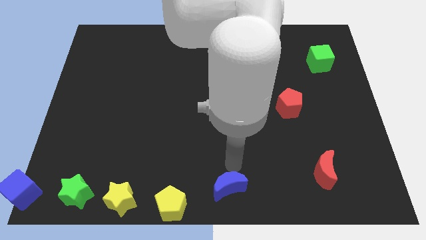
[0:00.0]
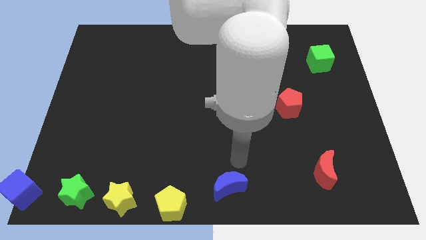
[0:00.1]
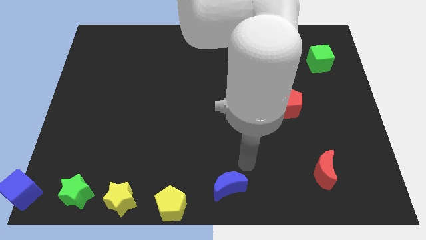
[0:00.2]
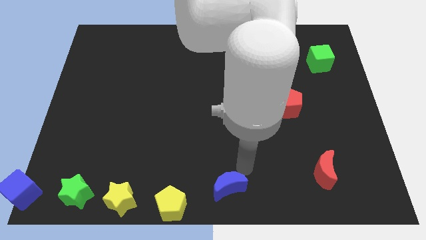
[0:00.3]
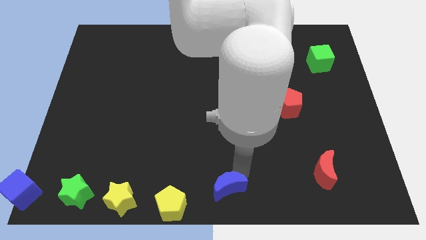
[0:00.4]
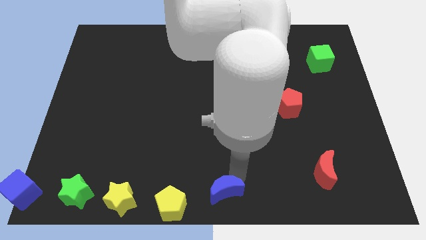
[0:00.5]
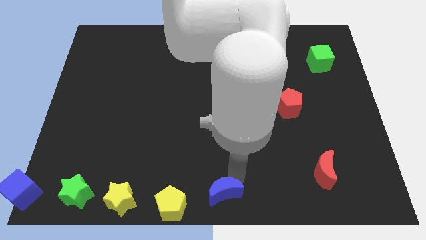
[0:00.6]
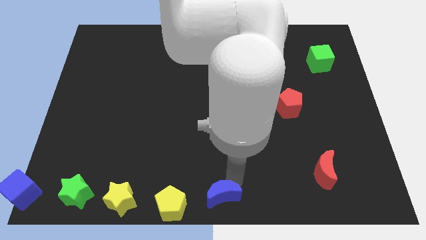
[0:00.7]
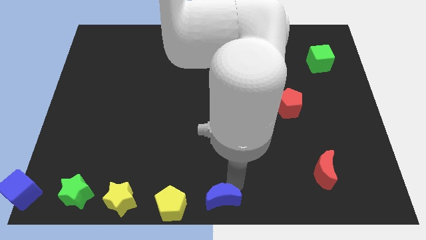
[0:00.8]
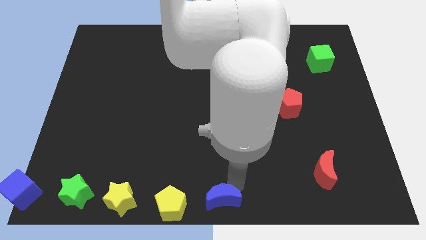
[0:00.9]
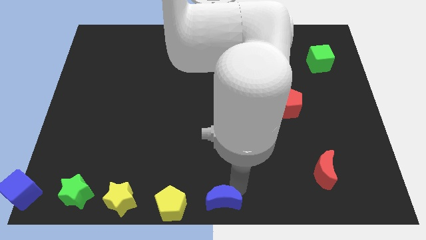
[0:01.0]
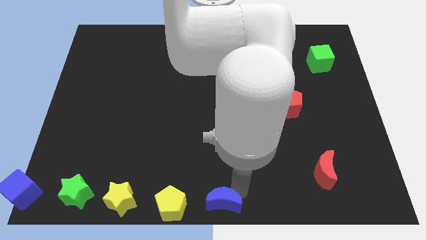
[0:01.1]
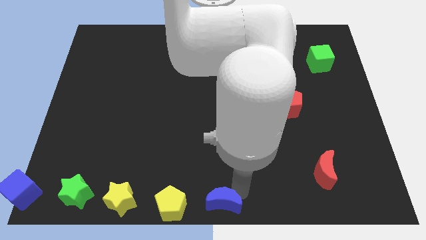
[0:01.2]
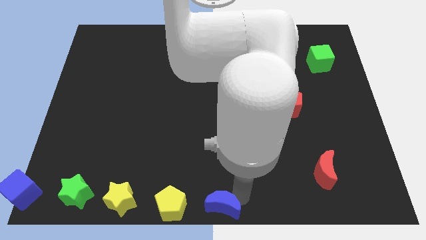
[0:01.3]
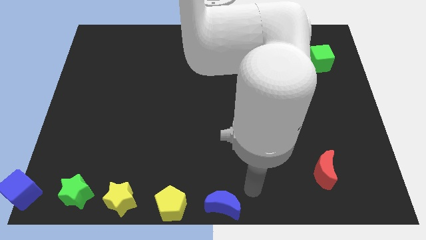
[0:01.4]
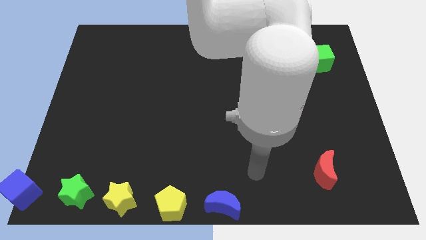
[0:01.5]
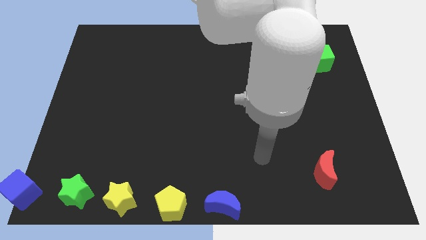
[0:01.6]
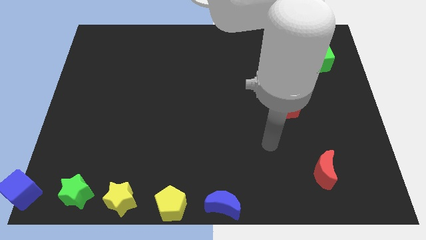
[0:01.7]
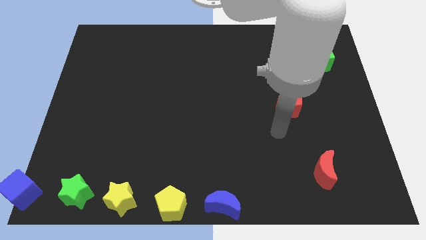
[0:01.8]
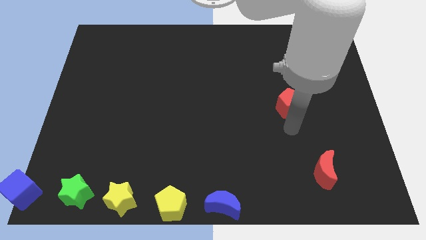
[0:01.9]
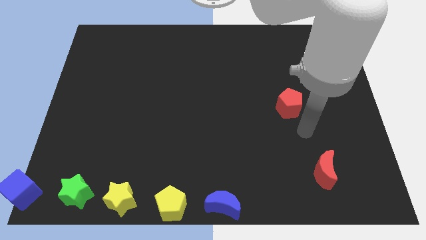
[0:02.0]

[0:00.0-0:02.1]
move blue moon to the bottom center

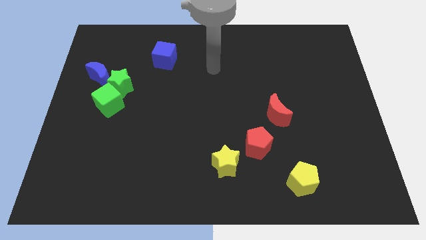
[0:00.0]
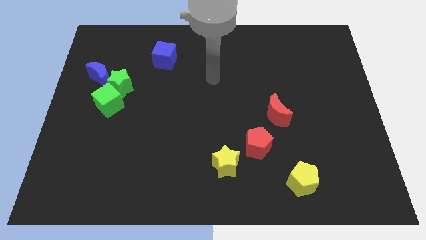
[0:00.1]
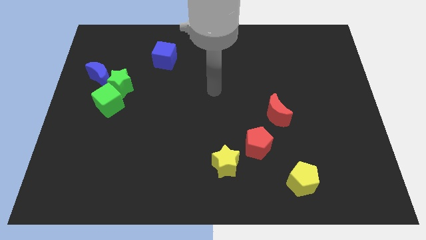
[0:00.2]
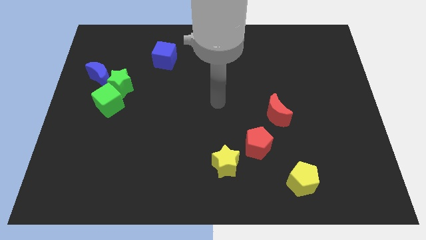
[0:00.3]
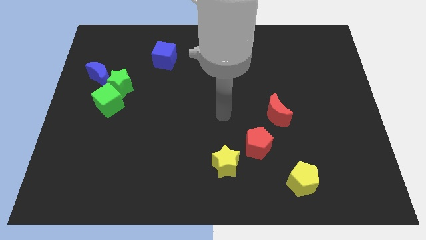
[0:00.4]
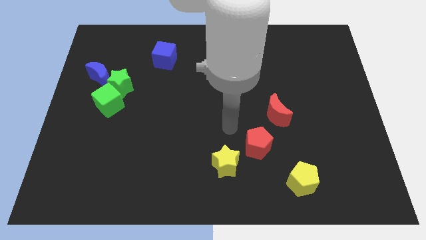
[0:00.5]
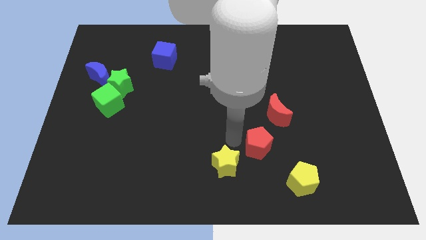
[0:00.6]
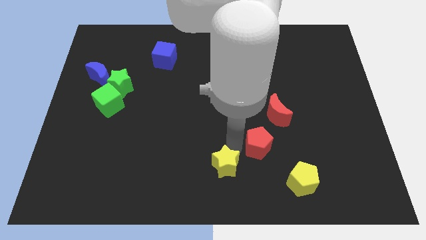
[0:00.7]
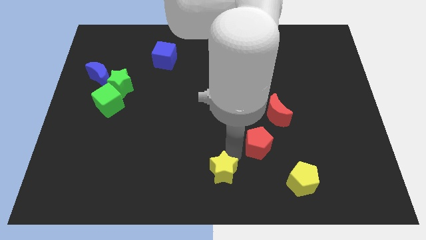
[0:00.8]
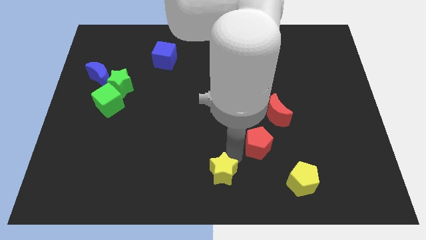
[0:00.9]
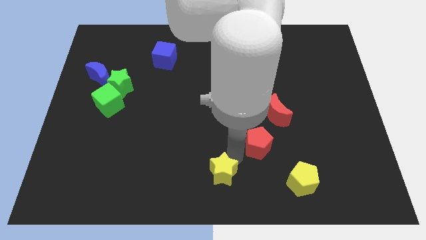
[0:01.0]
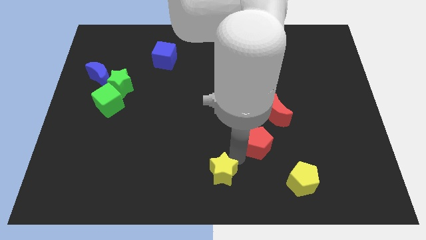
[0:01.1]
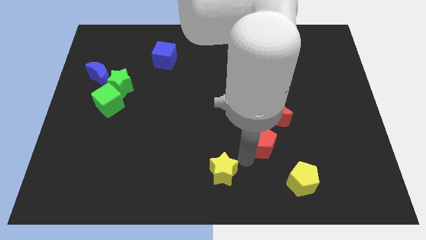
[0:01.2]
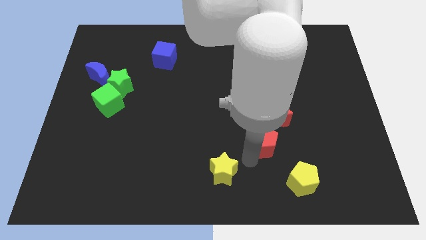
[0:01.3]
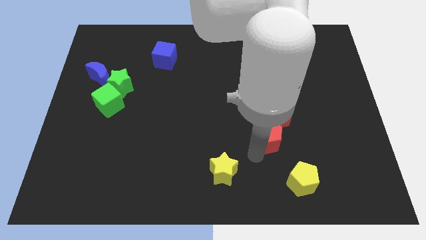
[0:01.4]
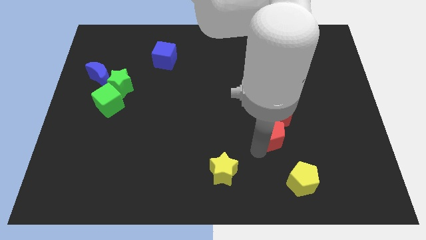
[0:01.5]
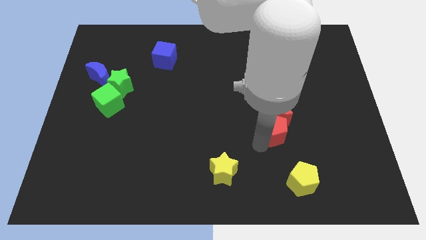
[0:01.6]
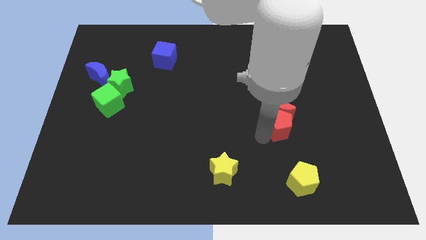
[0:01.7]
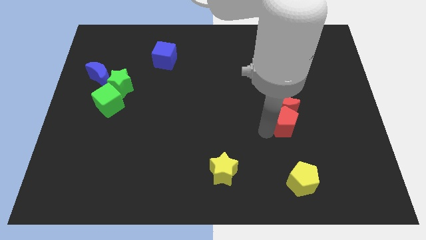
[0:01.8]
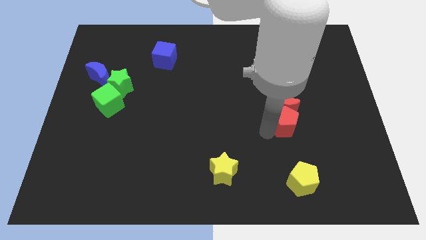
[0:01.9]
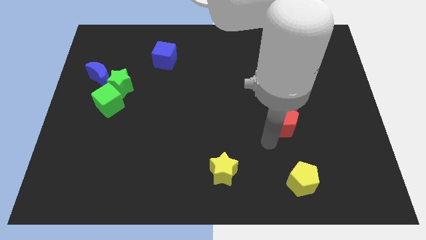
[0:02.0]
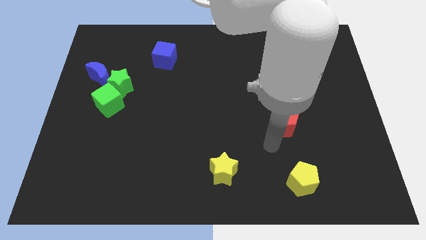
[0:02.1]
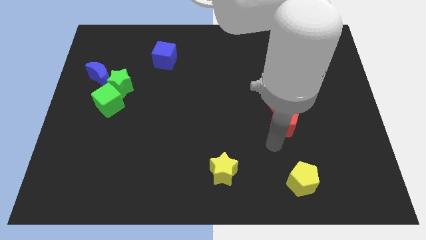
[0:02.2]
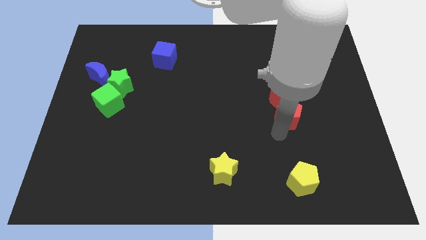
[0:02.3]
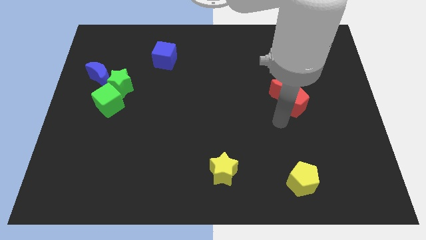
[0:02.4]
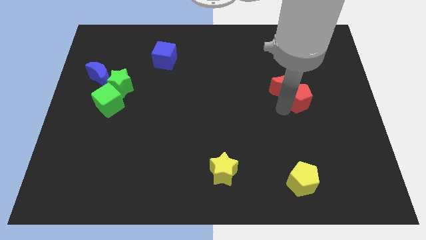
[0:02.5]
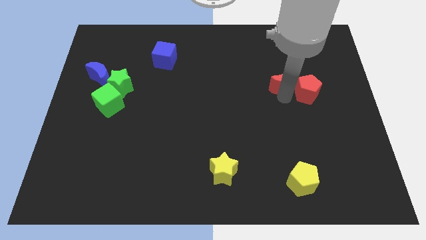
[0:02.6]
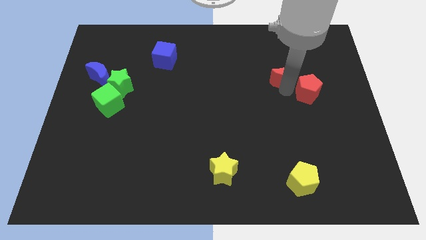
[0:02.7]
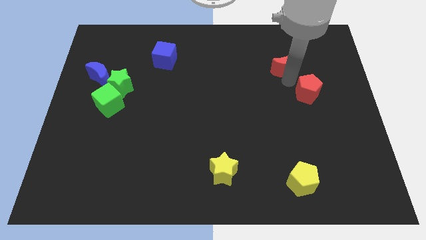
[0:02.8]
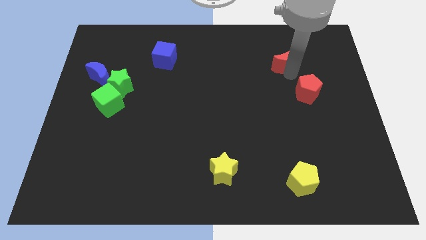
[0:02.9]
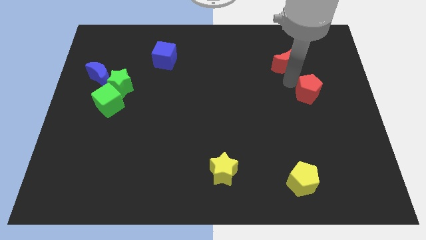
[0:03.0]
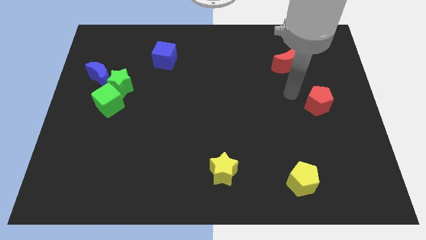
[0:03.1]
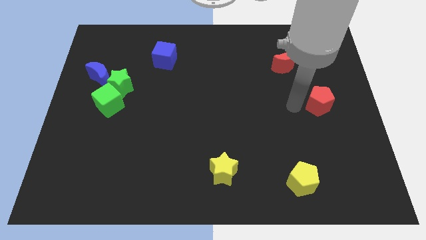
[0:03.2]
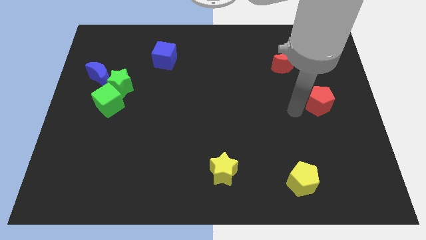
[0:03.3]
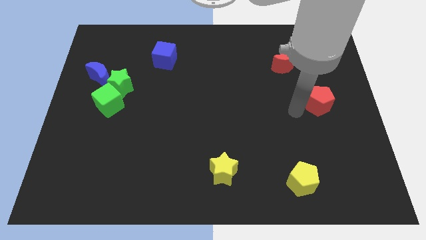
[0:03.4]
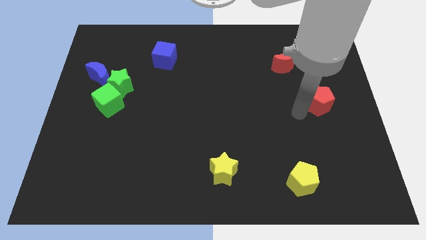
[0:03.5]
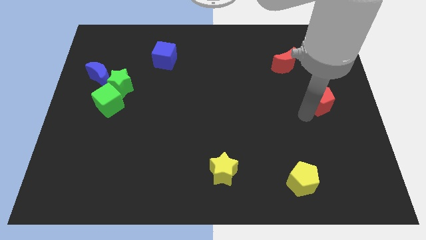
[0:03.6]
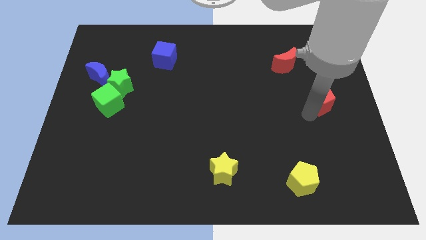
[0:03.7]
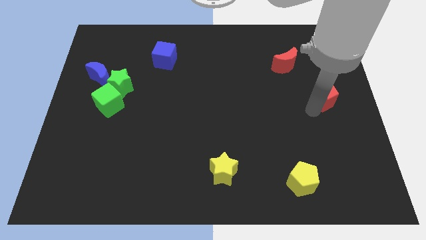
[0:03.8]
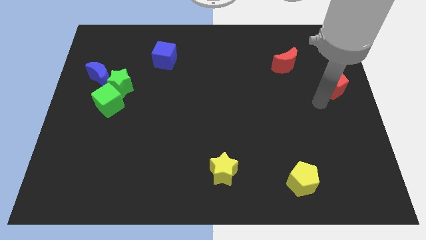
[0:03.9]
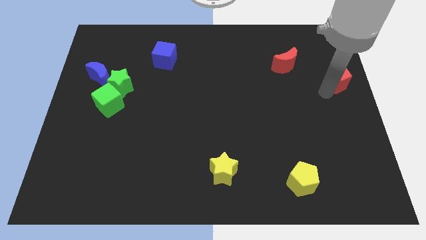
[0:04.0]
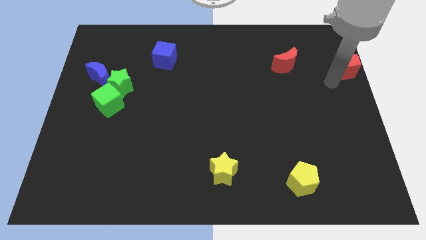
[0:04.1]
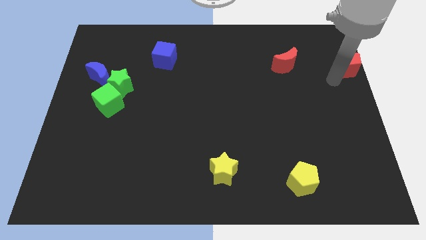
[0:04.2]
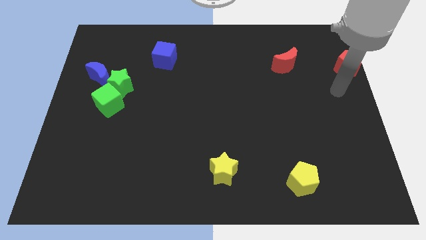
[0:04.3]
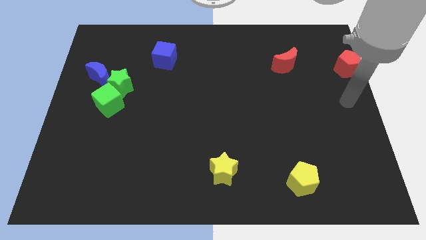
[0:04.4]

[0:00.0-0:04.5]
move the red pentagon towards the top right corner

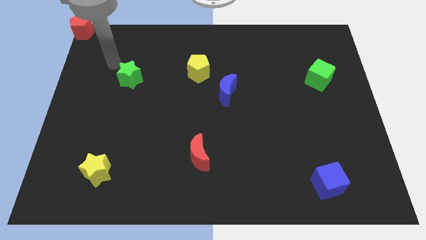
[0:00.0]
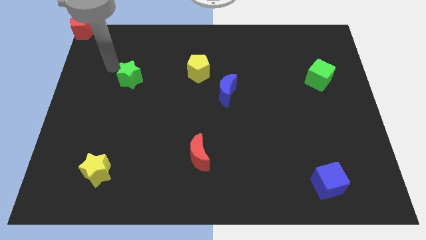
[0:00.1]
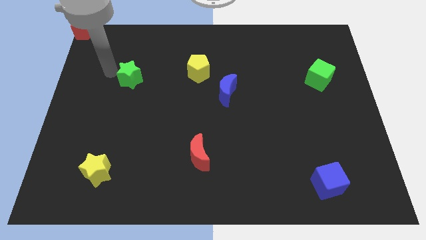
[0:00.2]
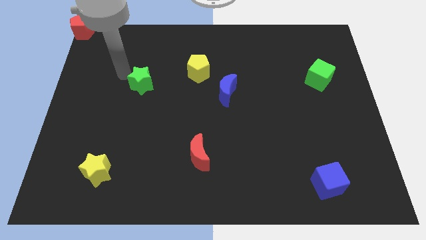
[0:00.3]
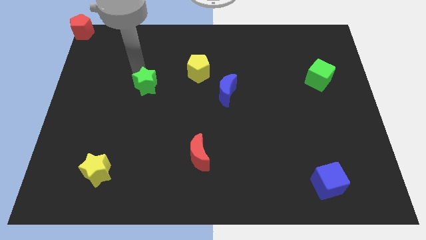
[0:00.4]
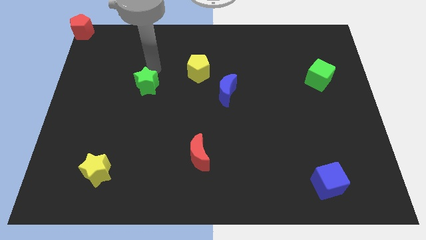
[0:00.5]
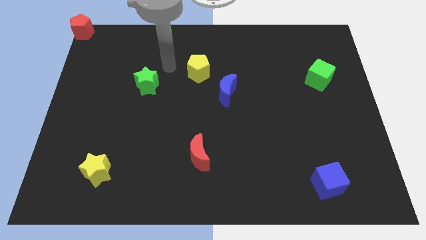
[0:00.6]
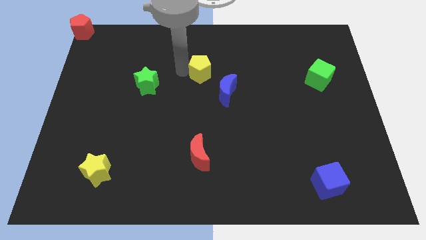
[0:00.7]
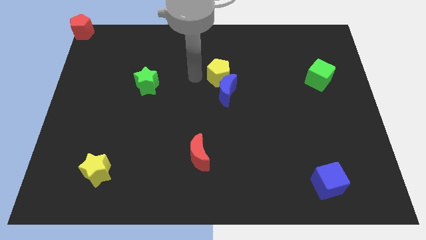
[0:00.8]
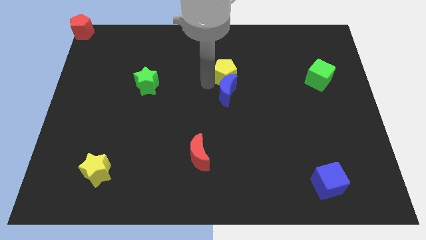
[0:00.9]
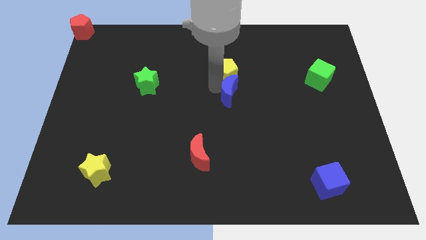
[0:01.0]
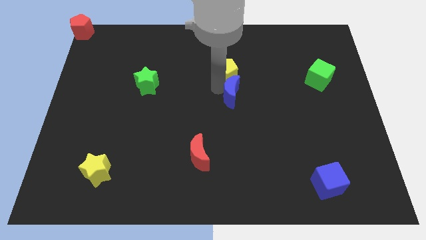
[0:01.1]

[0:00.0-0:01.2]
place yellow pentagon on top of the blue crescent

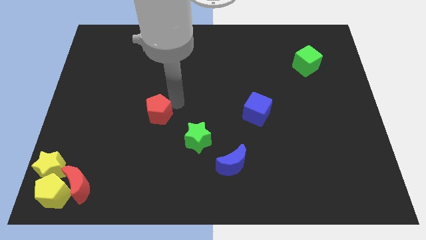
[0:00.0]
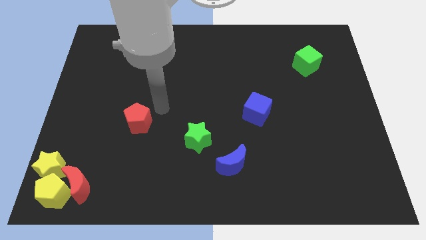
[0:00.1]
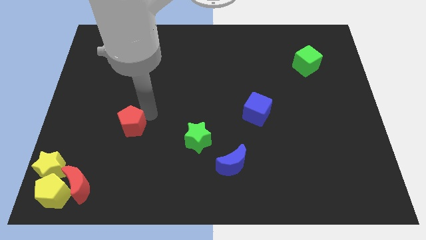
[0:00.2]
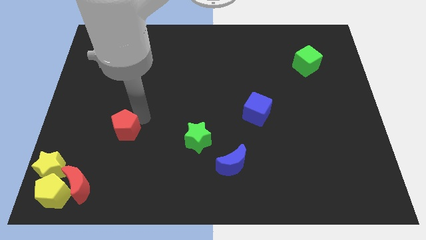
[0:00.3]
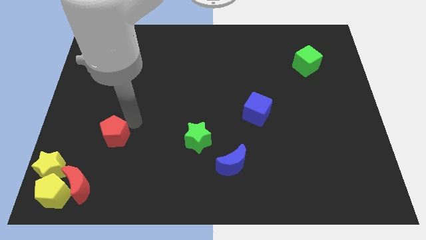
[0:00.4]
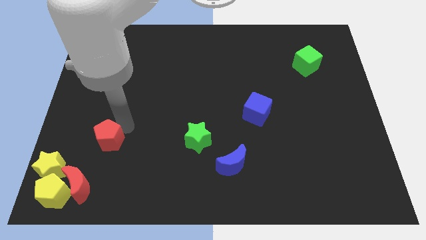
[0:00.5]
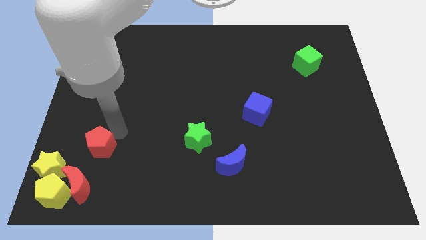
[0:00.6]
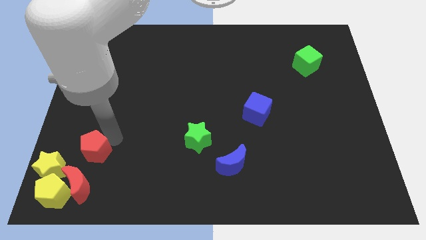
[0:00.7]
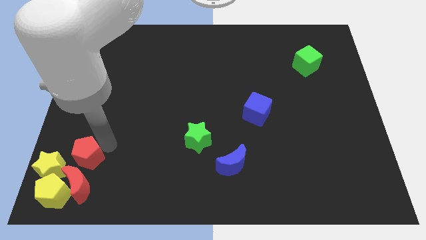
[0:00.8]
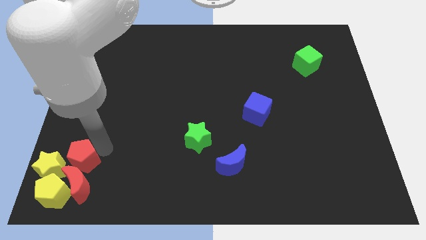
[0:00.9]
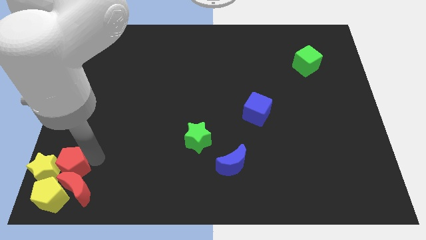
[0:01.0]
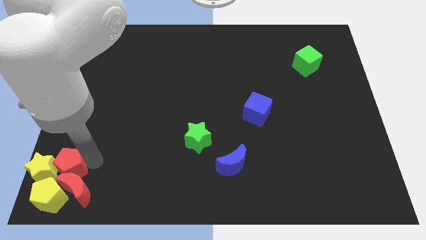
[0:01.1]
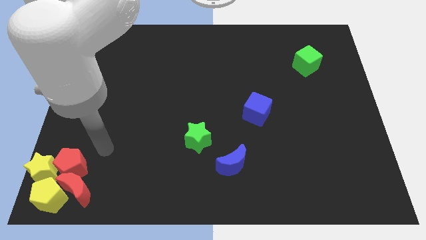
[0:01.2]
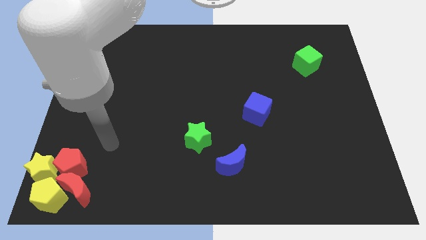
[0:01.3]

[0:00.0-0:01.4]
push the red pentagon into the group of blocks
